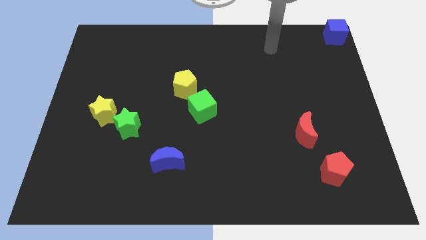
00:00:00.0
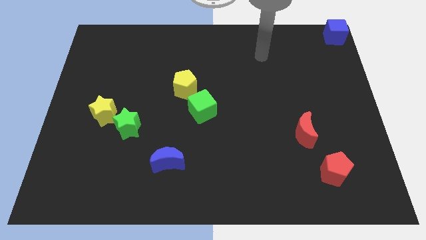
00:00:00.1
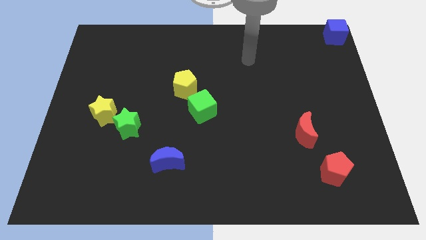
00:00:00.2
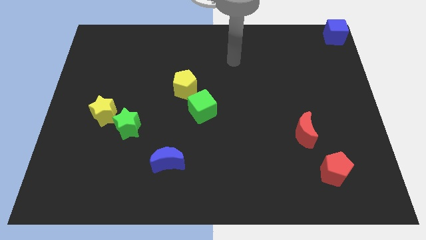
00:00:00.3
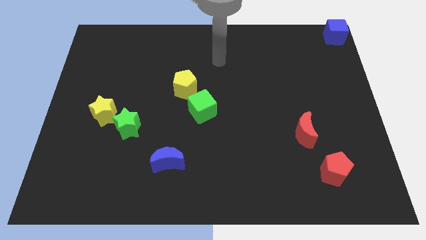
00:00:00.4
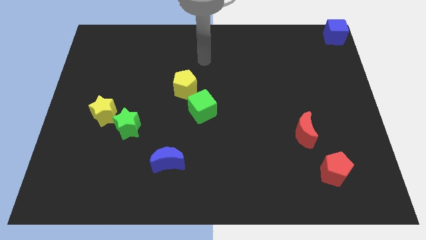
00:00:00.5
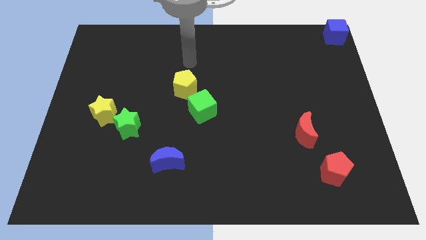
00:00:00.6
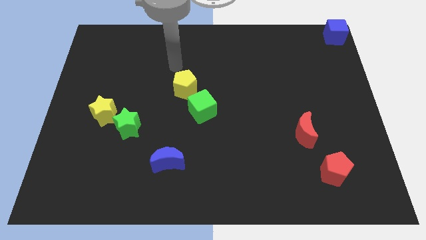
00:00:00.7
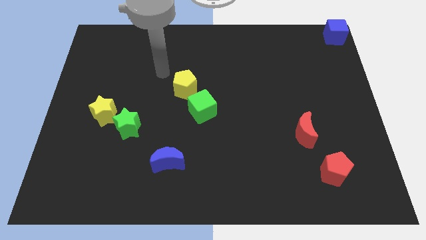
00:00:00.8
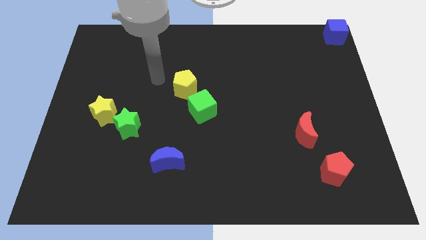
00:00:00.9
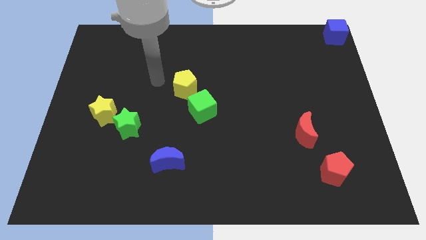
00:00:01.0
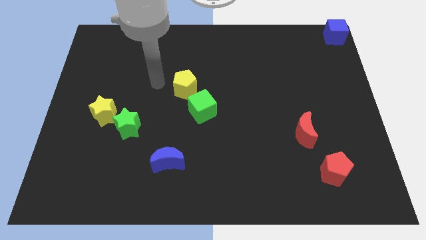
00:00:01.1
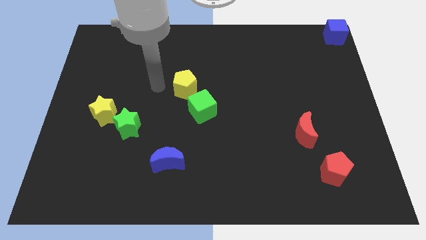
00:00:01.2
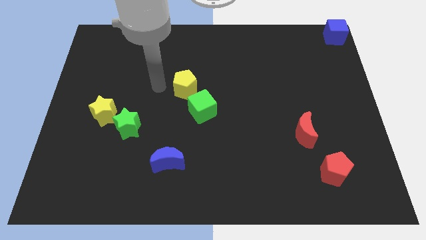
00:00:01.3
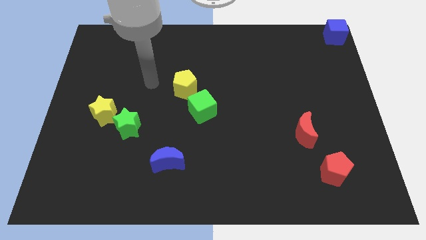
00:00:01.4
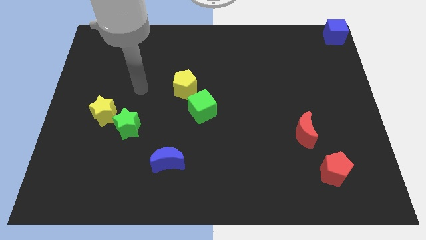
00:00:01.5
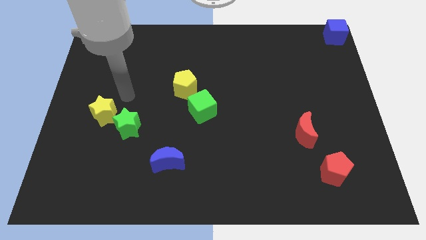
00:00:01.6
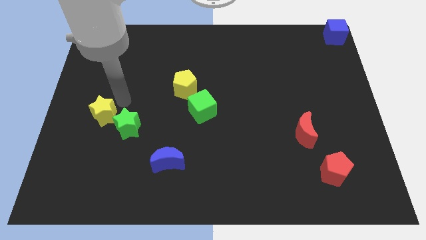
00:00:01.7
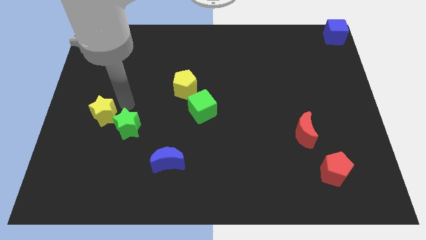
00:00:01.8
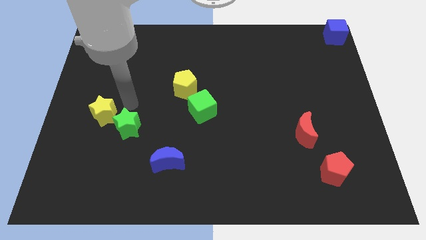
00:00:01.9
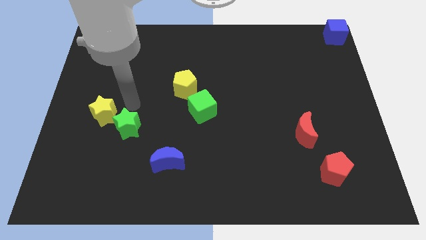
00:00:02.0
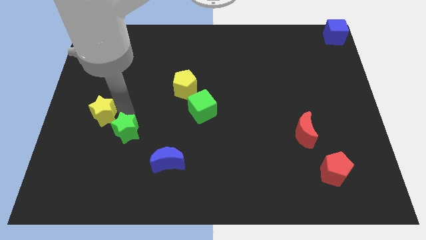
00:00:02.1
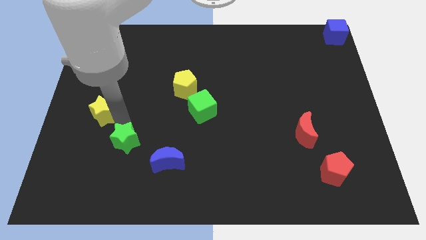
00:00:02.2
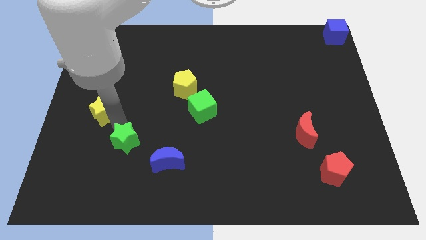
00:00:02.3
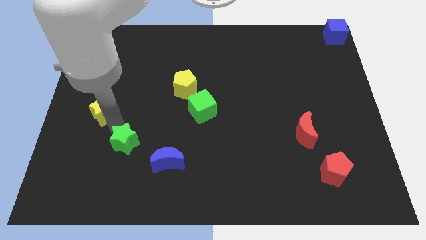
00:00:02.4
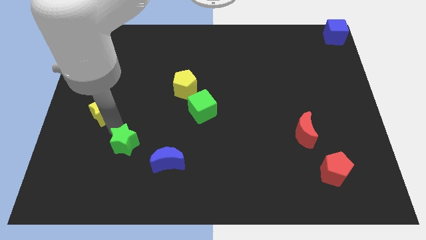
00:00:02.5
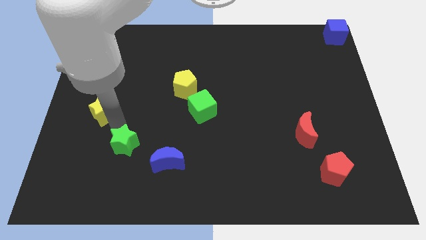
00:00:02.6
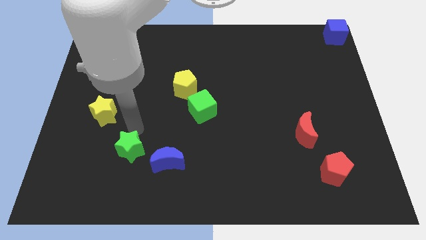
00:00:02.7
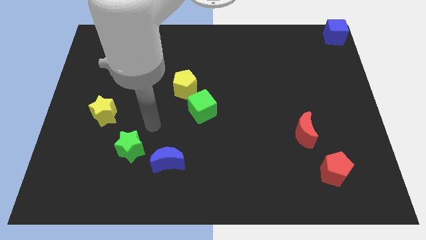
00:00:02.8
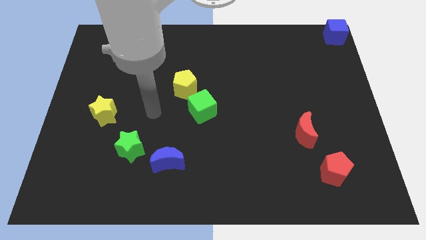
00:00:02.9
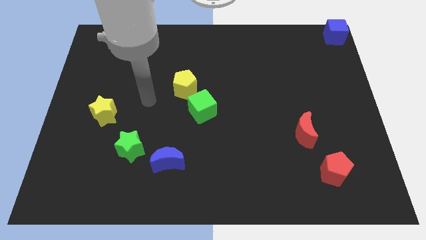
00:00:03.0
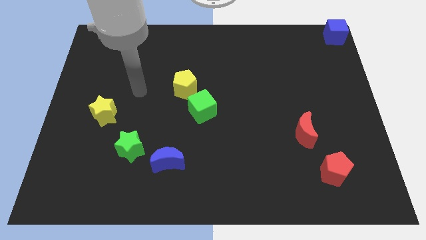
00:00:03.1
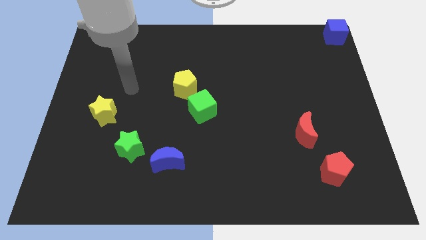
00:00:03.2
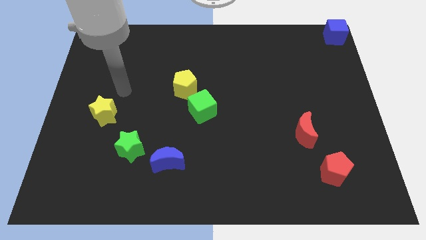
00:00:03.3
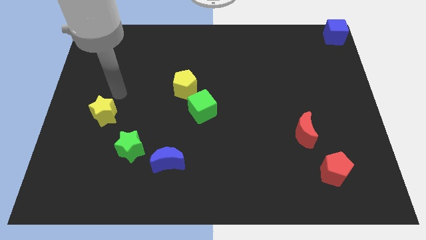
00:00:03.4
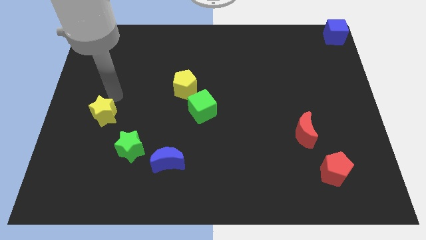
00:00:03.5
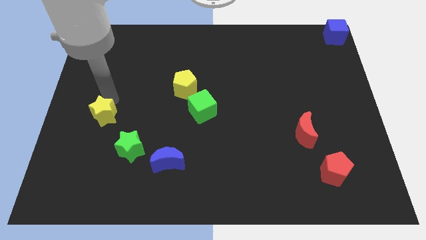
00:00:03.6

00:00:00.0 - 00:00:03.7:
separate the green star from the yellow star

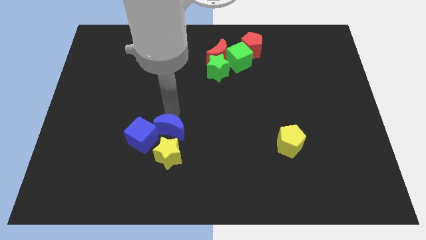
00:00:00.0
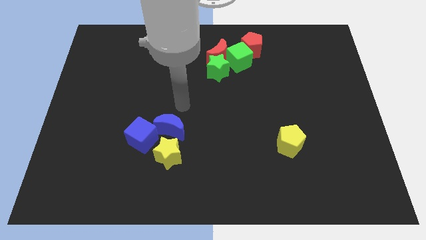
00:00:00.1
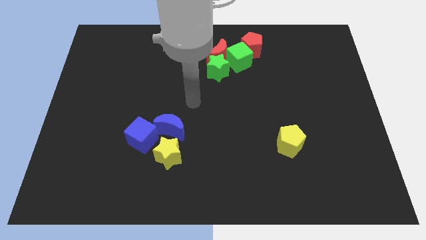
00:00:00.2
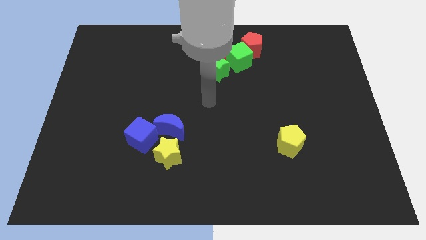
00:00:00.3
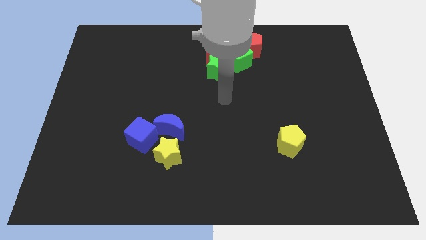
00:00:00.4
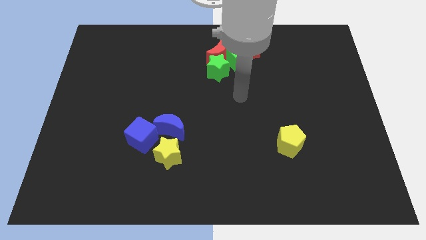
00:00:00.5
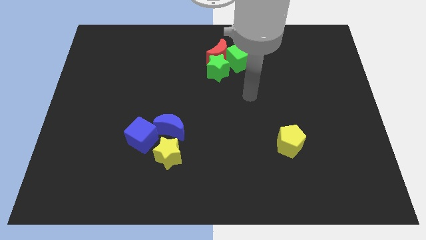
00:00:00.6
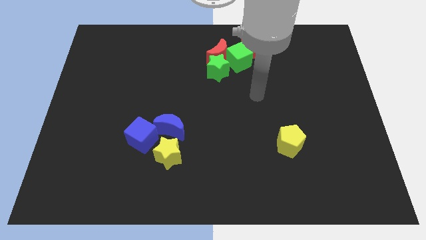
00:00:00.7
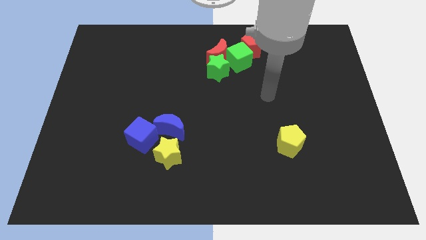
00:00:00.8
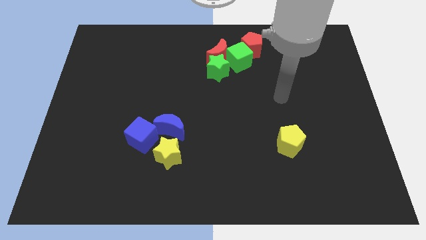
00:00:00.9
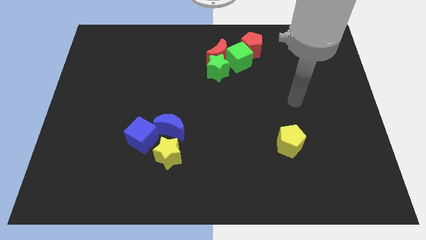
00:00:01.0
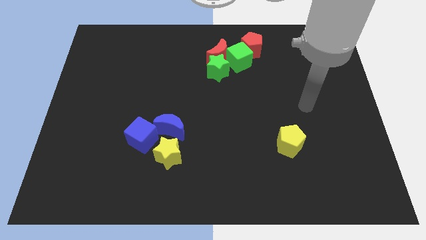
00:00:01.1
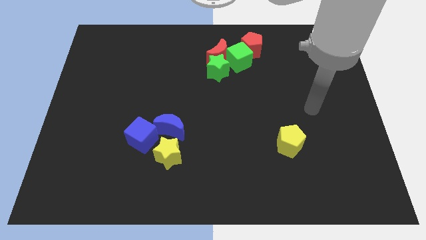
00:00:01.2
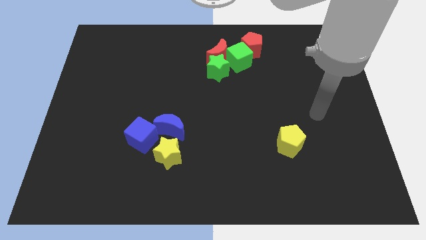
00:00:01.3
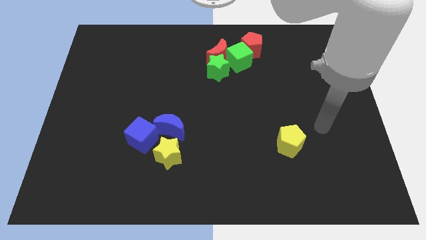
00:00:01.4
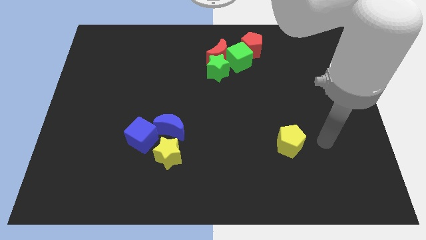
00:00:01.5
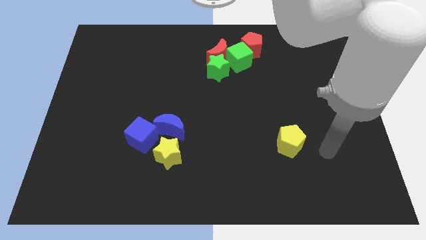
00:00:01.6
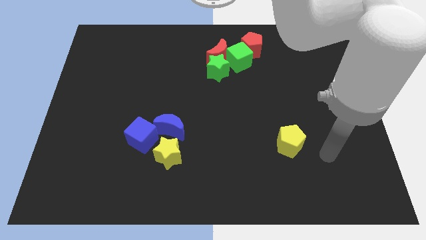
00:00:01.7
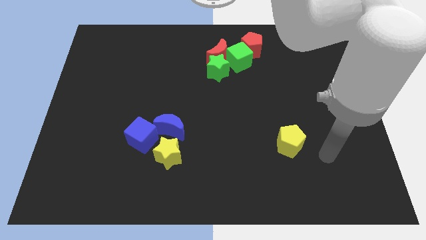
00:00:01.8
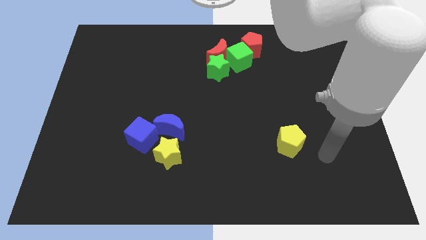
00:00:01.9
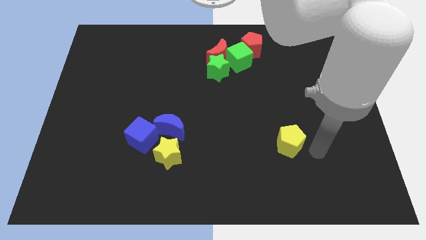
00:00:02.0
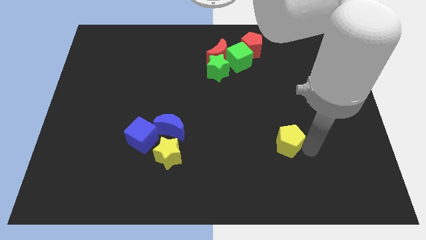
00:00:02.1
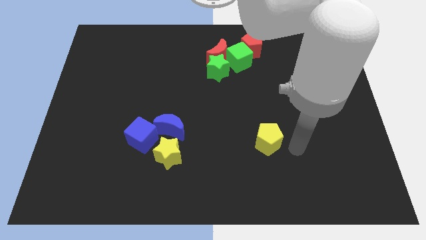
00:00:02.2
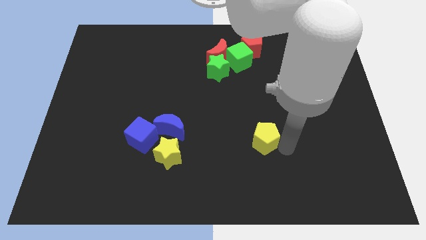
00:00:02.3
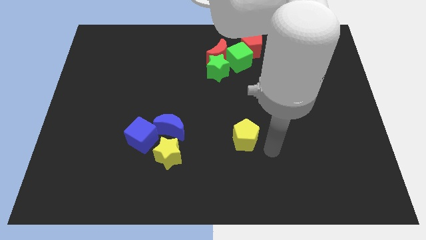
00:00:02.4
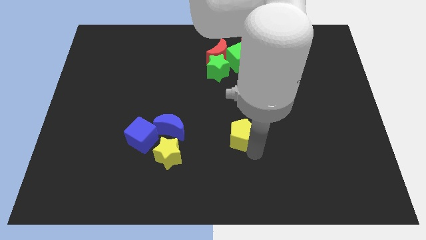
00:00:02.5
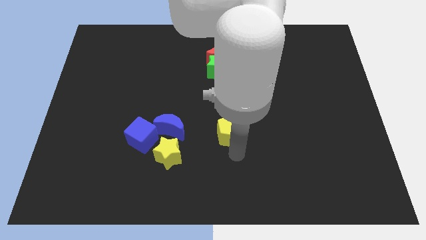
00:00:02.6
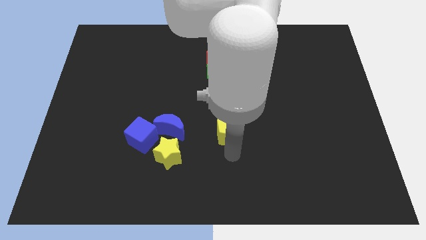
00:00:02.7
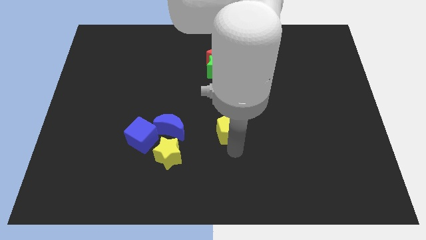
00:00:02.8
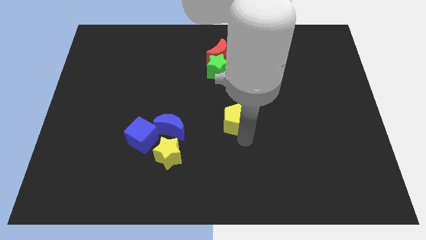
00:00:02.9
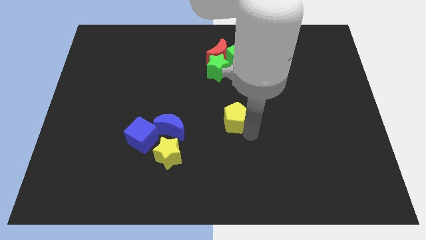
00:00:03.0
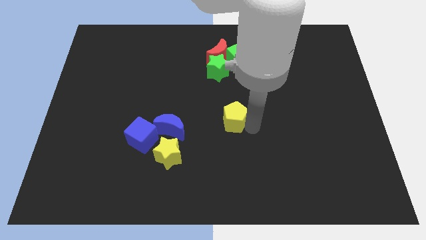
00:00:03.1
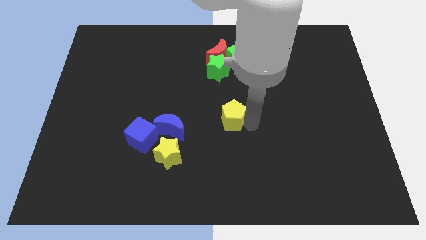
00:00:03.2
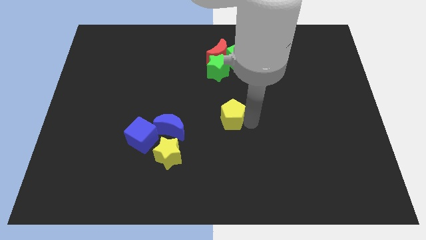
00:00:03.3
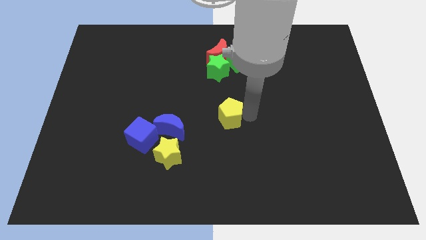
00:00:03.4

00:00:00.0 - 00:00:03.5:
drag yellow pentagon diagonally top right to the blue moon

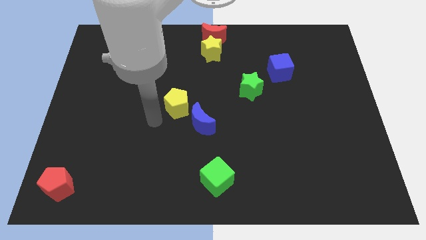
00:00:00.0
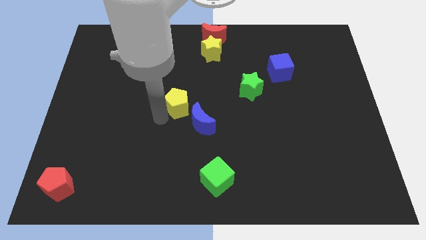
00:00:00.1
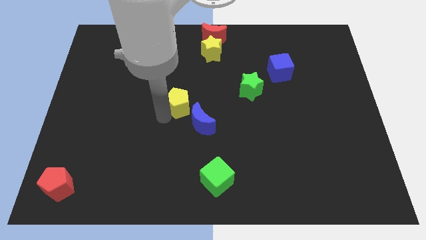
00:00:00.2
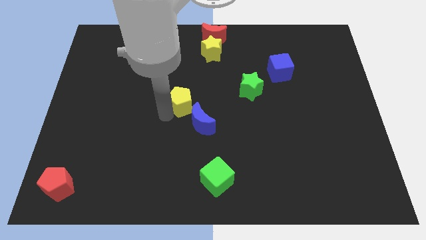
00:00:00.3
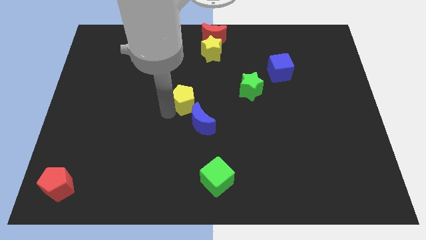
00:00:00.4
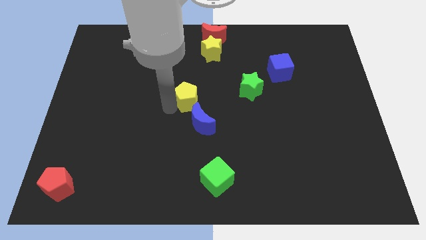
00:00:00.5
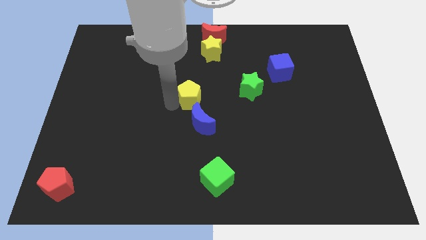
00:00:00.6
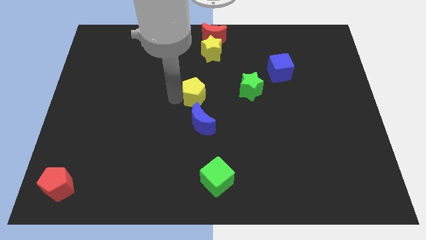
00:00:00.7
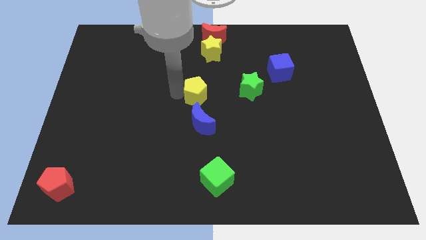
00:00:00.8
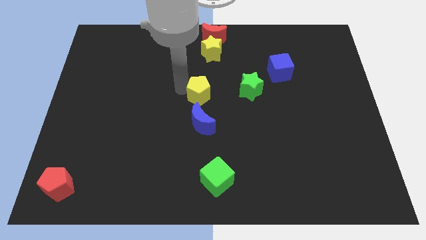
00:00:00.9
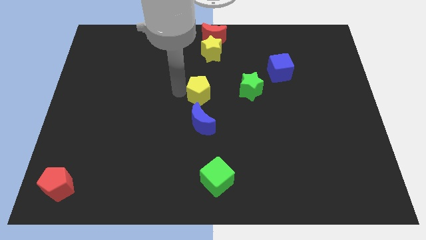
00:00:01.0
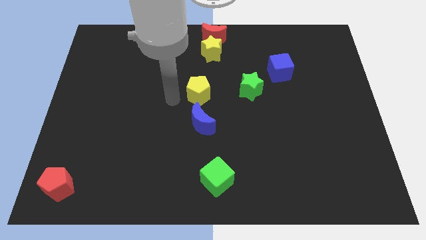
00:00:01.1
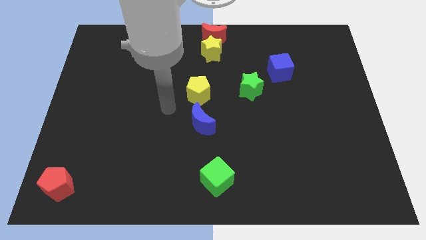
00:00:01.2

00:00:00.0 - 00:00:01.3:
place the yellow pentagon to the left of the green star

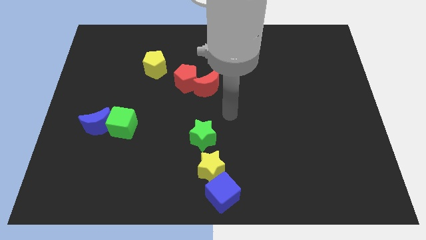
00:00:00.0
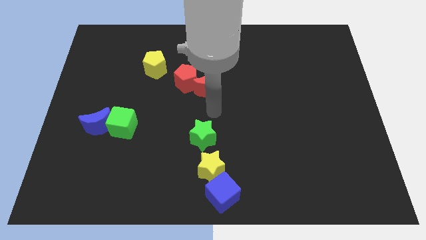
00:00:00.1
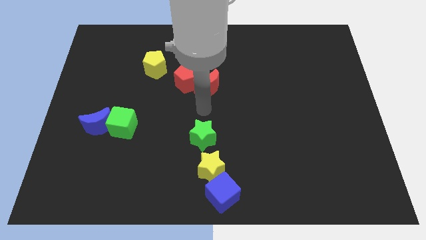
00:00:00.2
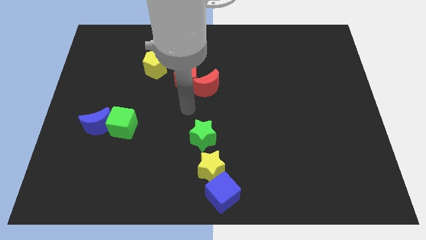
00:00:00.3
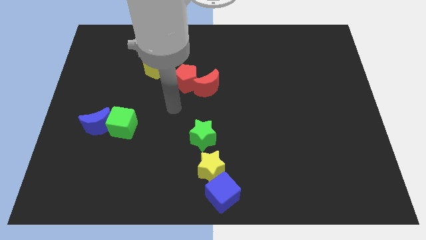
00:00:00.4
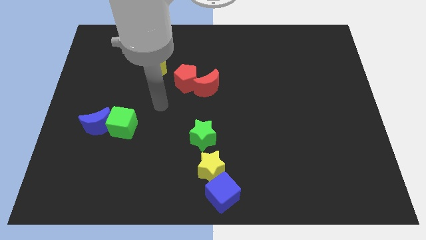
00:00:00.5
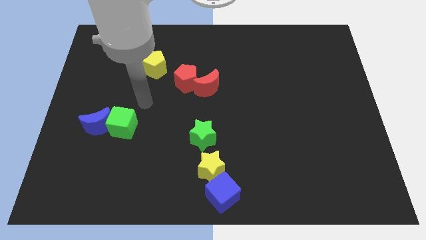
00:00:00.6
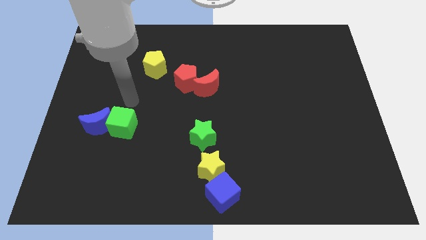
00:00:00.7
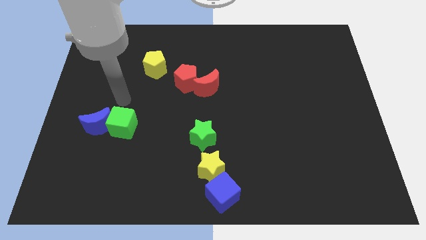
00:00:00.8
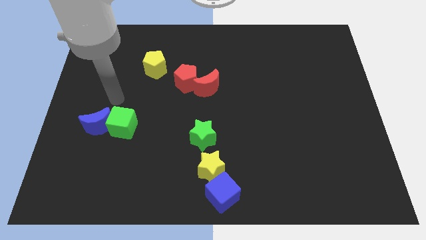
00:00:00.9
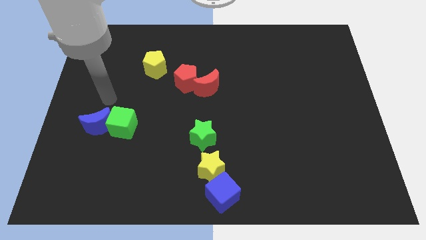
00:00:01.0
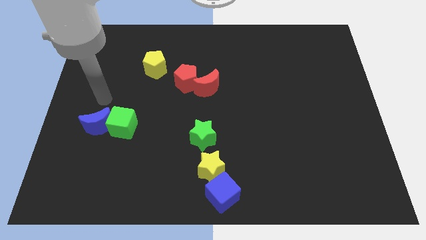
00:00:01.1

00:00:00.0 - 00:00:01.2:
point your arm above blue moon
